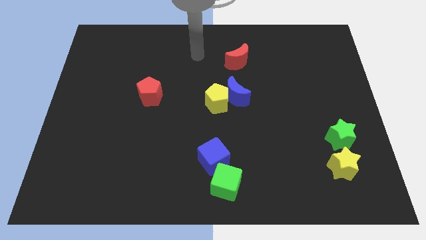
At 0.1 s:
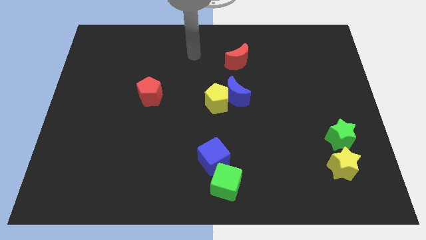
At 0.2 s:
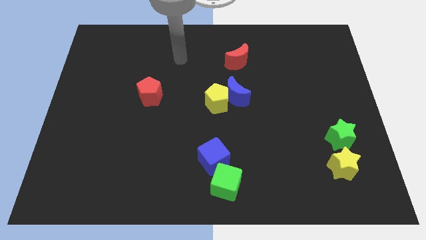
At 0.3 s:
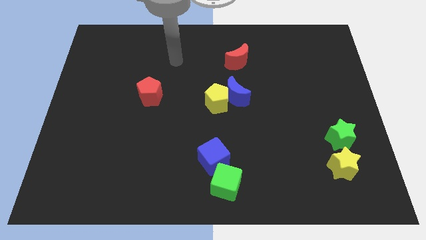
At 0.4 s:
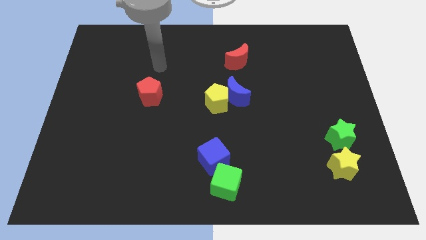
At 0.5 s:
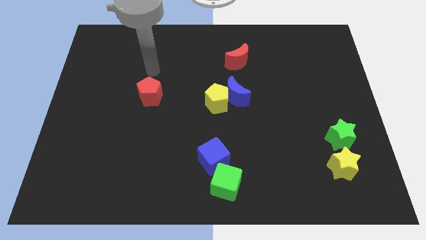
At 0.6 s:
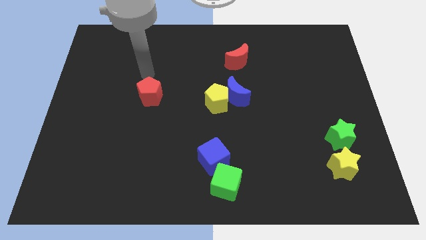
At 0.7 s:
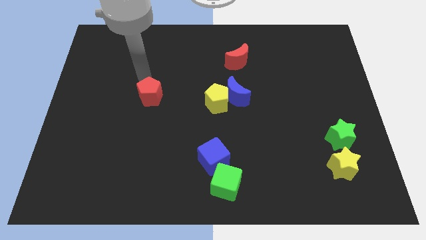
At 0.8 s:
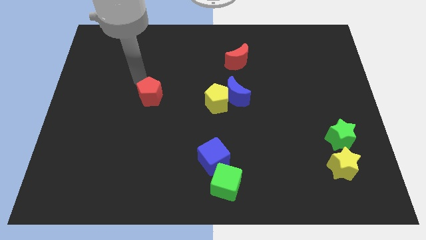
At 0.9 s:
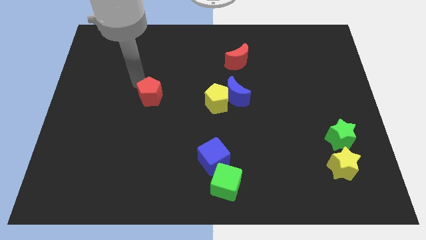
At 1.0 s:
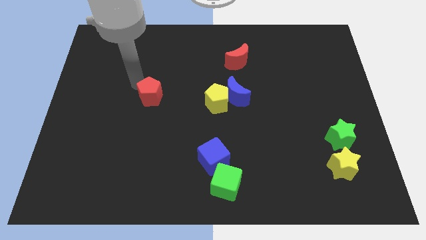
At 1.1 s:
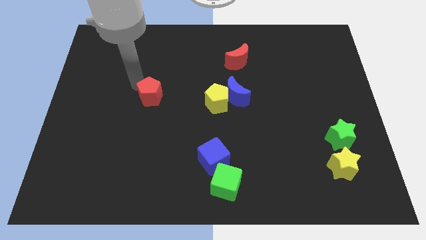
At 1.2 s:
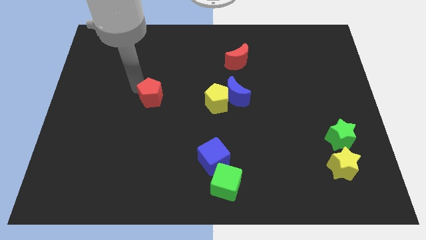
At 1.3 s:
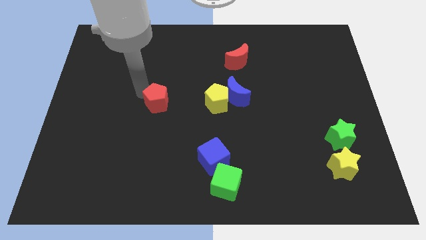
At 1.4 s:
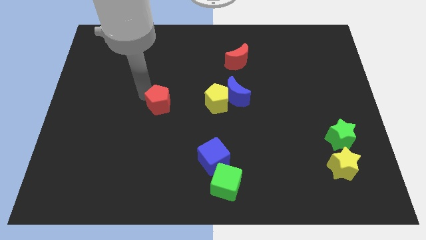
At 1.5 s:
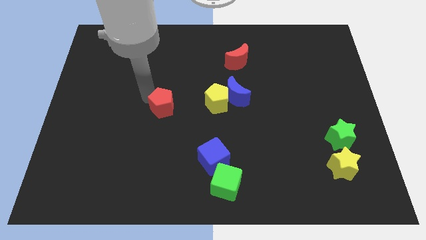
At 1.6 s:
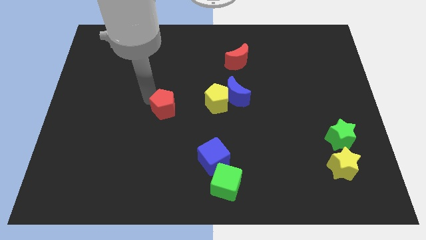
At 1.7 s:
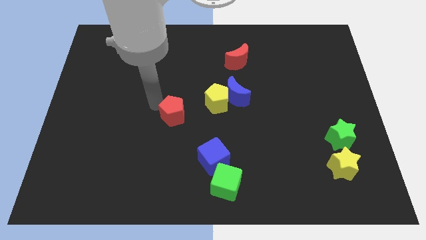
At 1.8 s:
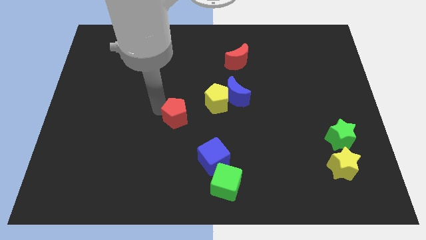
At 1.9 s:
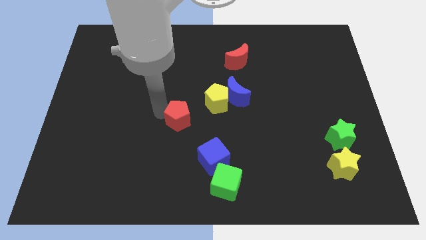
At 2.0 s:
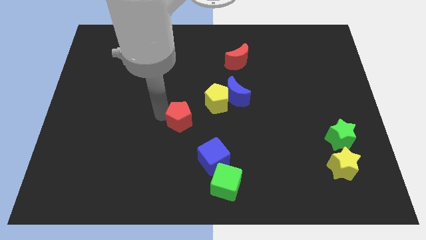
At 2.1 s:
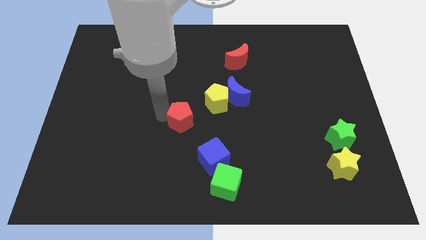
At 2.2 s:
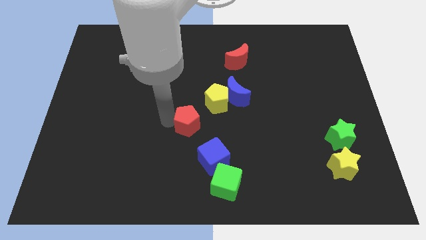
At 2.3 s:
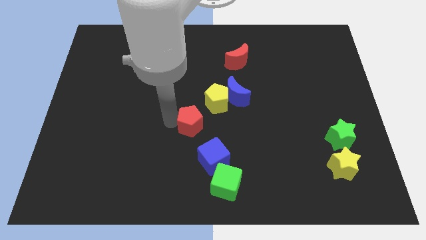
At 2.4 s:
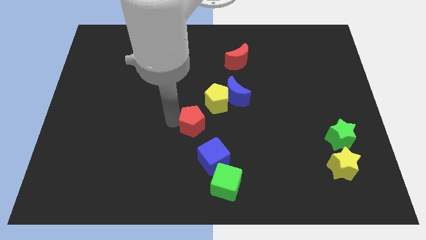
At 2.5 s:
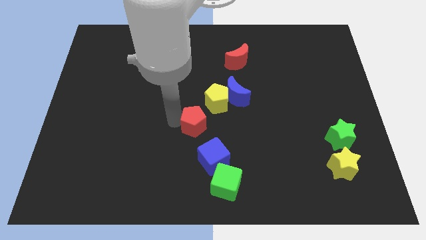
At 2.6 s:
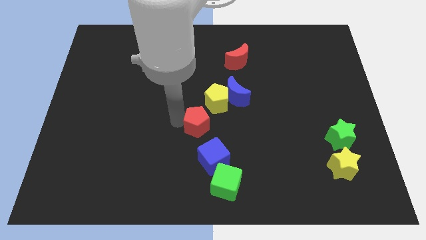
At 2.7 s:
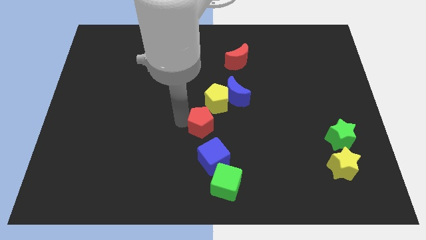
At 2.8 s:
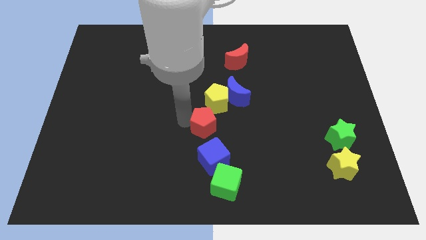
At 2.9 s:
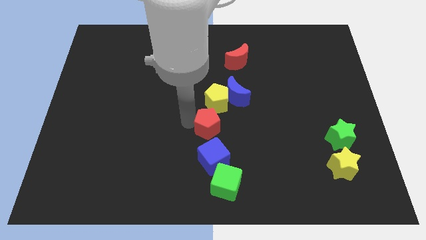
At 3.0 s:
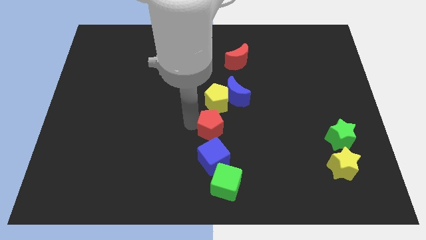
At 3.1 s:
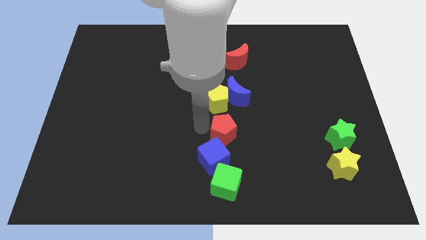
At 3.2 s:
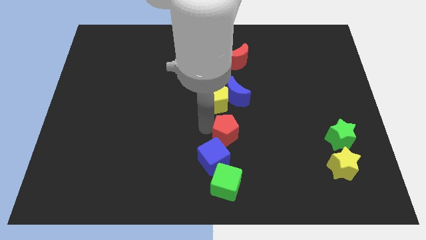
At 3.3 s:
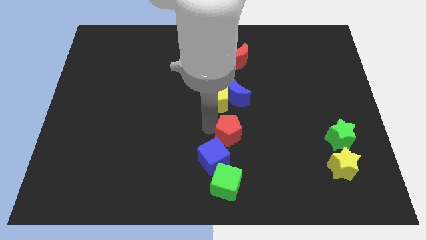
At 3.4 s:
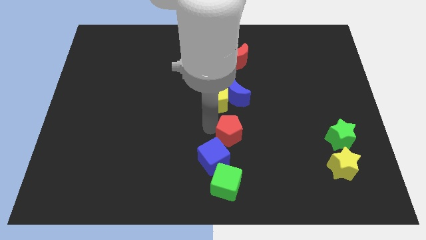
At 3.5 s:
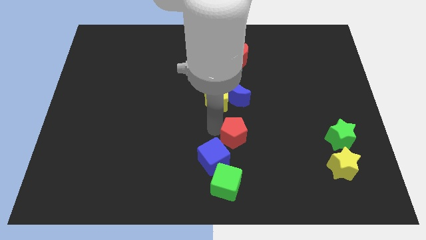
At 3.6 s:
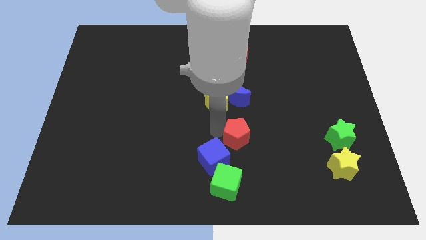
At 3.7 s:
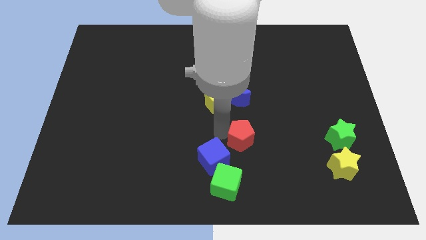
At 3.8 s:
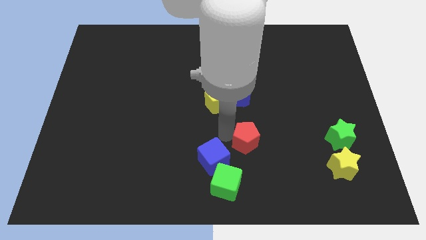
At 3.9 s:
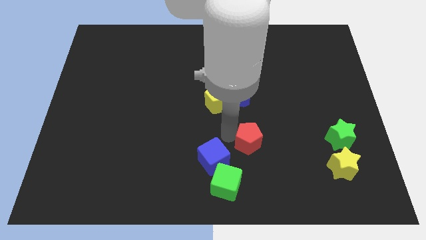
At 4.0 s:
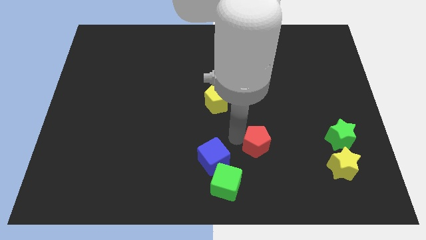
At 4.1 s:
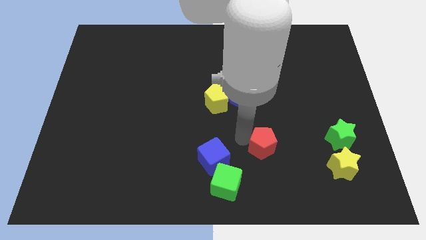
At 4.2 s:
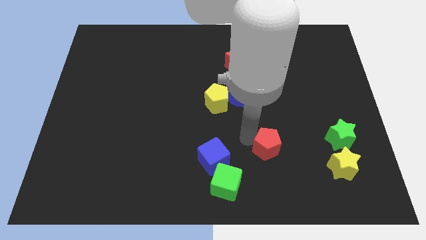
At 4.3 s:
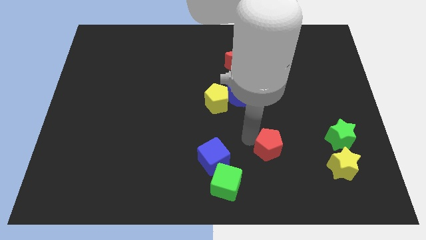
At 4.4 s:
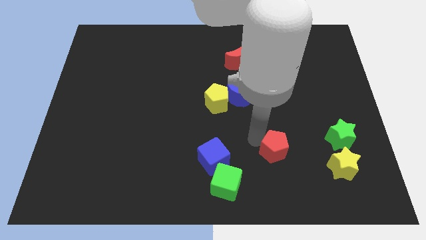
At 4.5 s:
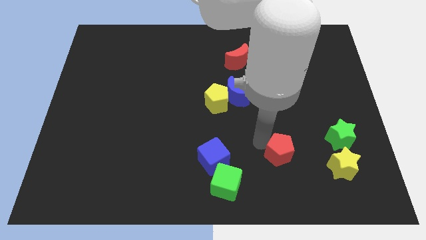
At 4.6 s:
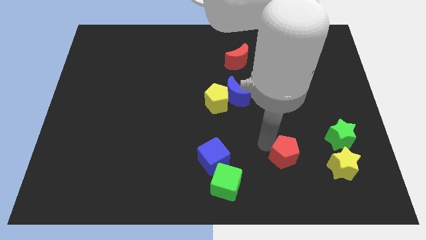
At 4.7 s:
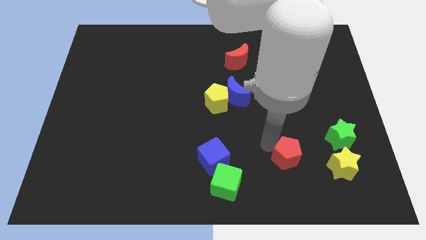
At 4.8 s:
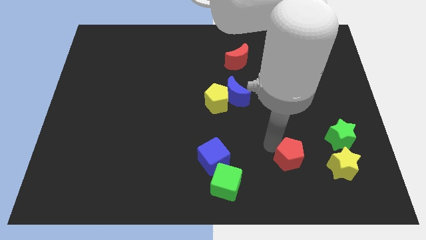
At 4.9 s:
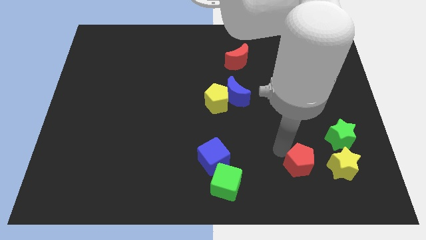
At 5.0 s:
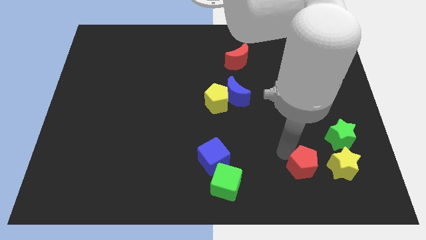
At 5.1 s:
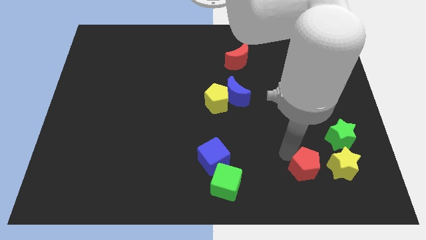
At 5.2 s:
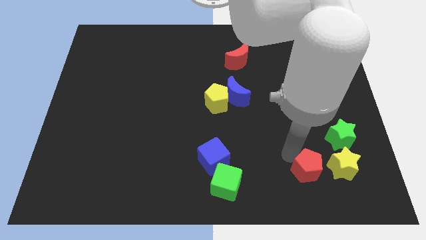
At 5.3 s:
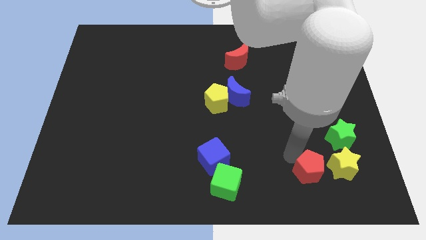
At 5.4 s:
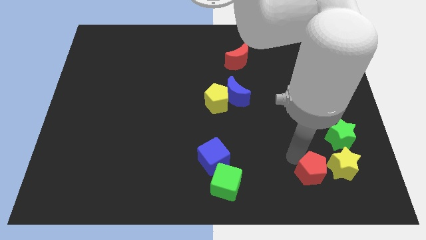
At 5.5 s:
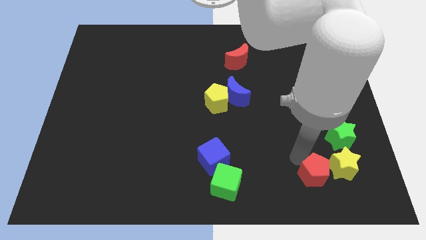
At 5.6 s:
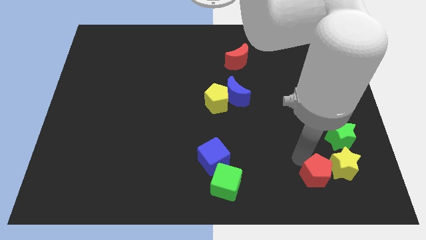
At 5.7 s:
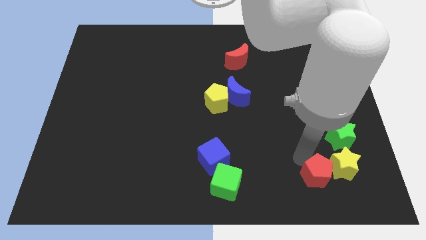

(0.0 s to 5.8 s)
put the red pentagon to the yellow star

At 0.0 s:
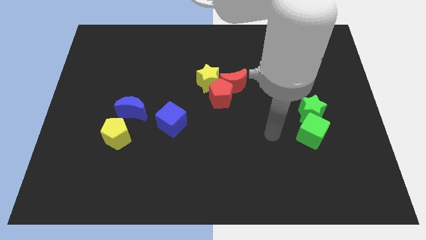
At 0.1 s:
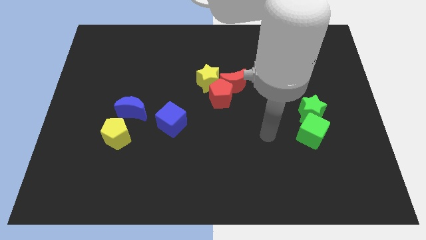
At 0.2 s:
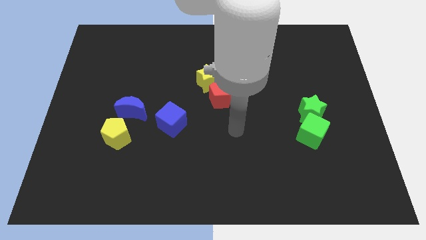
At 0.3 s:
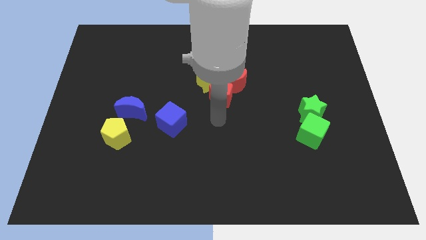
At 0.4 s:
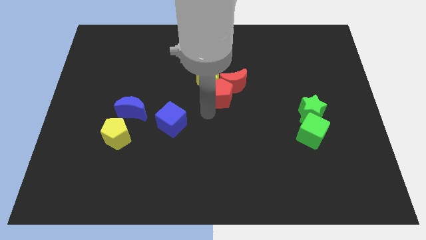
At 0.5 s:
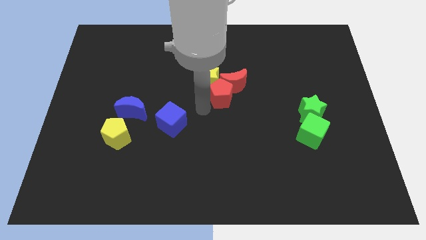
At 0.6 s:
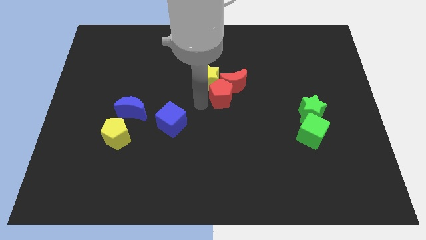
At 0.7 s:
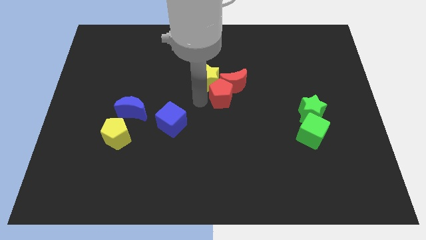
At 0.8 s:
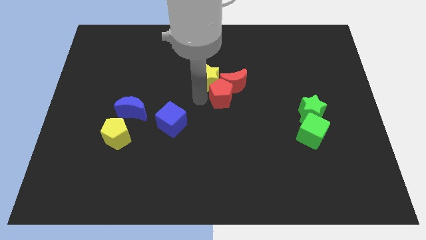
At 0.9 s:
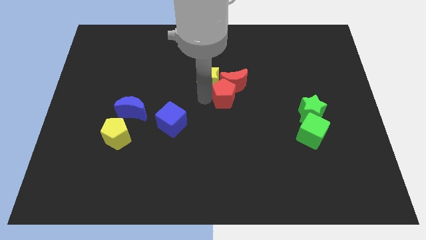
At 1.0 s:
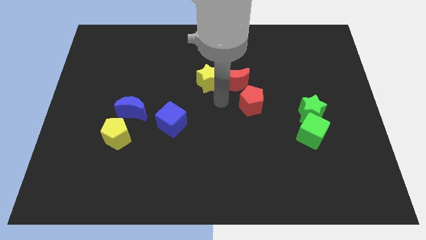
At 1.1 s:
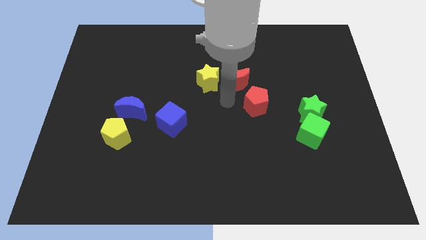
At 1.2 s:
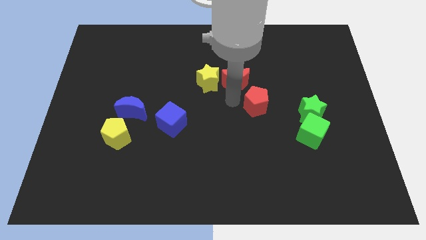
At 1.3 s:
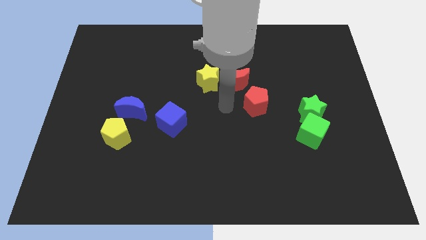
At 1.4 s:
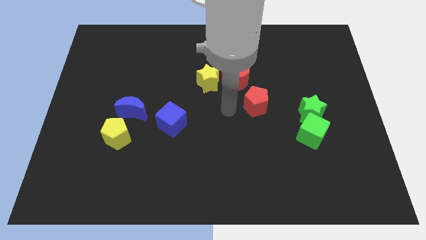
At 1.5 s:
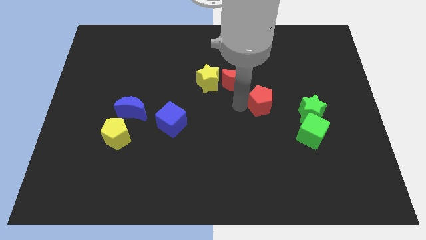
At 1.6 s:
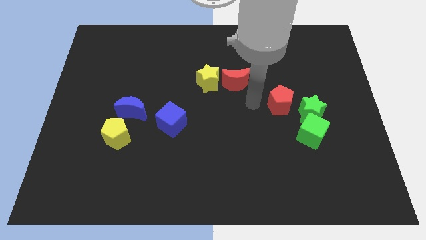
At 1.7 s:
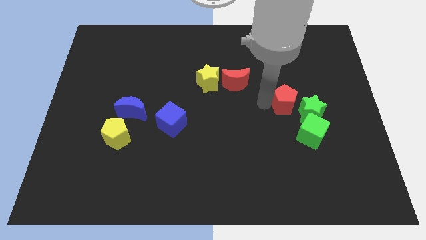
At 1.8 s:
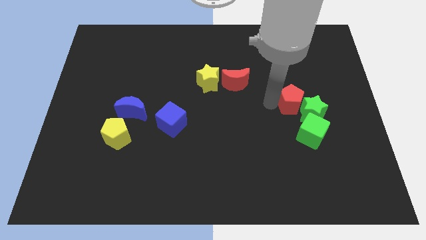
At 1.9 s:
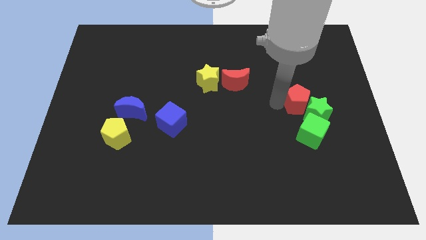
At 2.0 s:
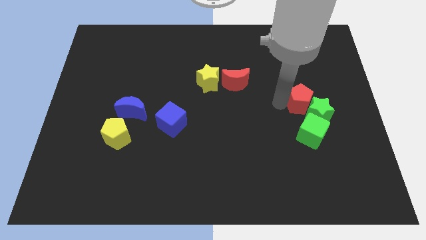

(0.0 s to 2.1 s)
slide the red pentagon to the green star
